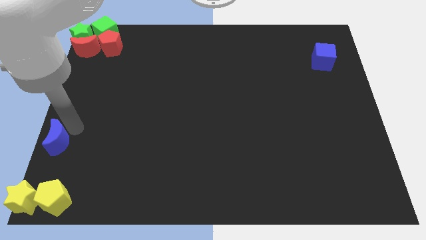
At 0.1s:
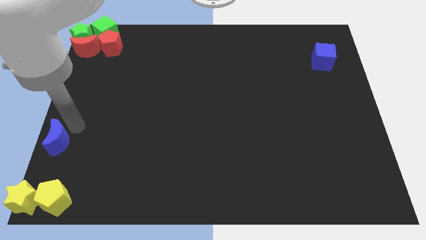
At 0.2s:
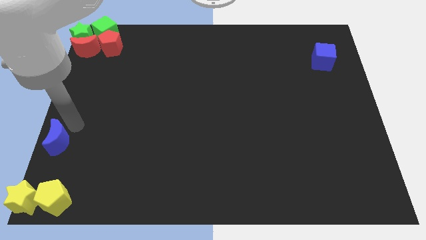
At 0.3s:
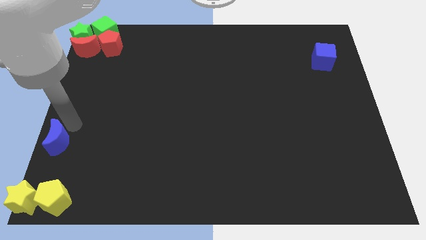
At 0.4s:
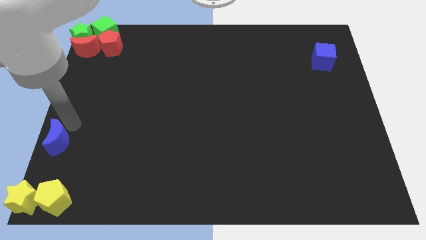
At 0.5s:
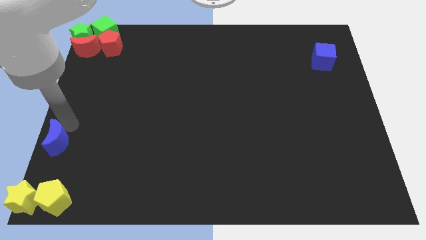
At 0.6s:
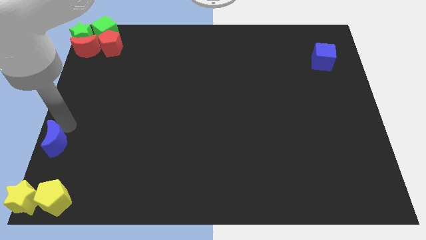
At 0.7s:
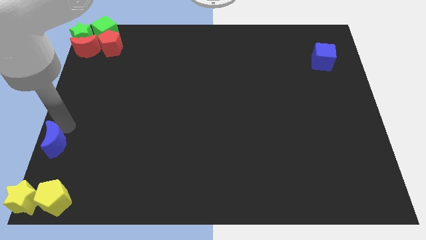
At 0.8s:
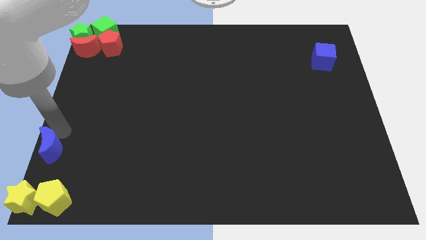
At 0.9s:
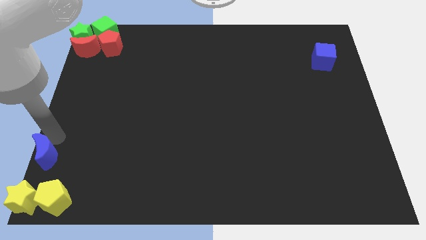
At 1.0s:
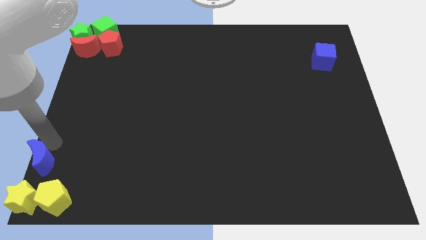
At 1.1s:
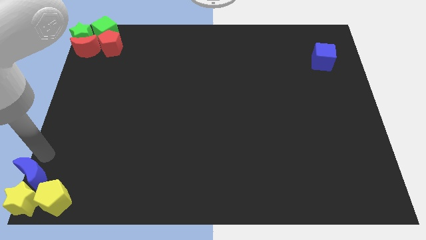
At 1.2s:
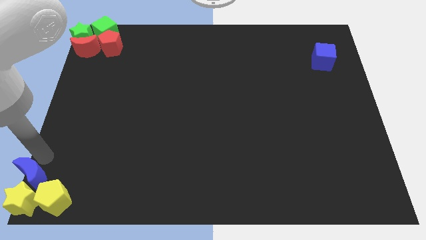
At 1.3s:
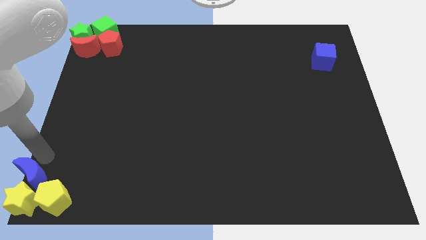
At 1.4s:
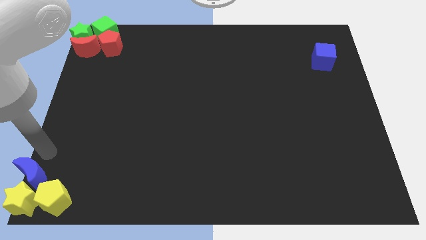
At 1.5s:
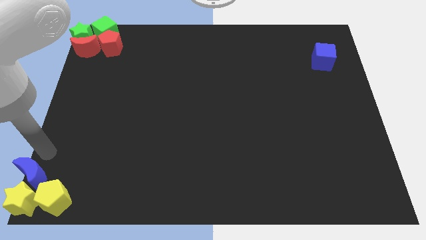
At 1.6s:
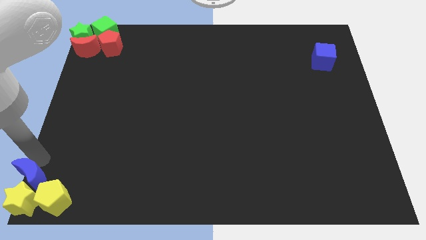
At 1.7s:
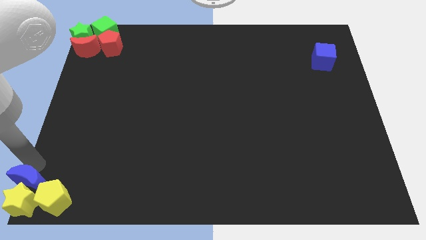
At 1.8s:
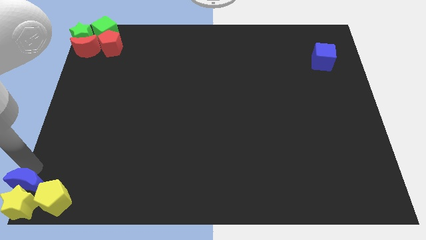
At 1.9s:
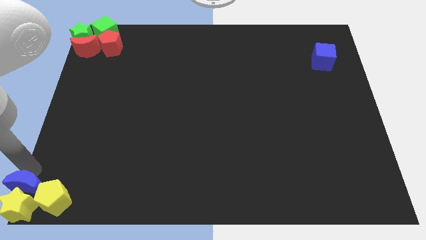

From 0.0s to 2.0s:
push the blue moon into the yellow star

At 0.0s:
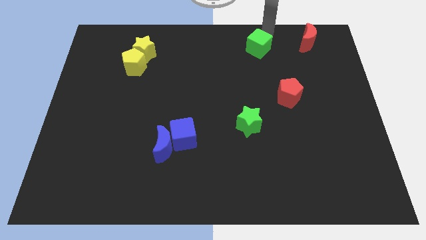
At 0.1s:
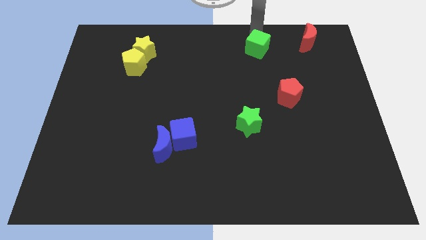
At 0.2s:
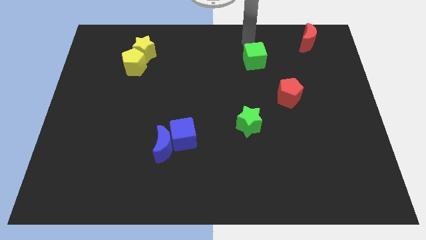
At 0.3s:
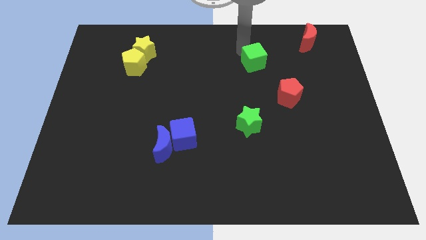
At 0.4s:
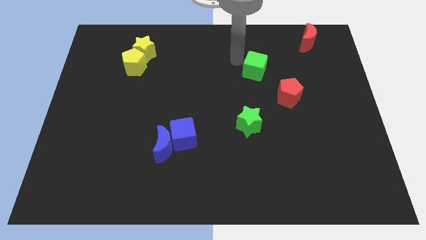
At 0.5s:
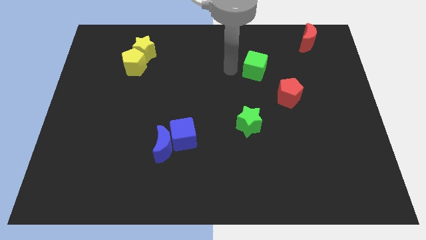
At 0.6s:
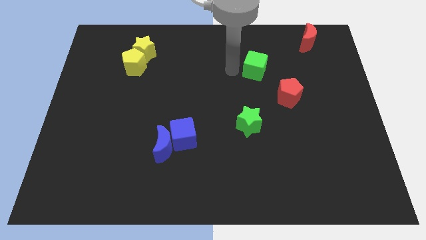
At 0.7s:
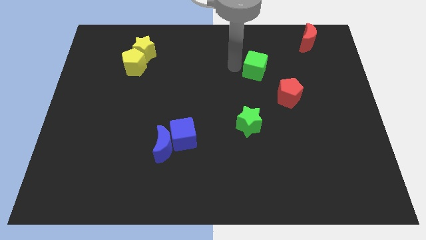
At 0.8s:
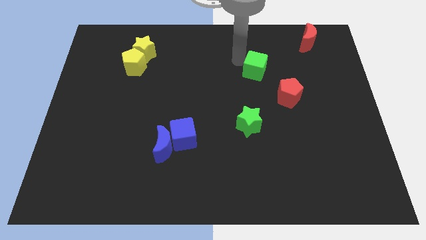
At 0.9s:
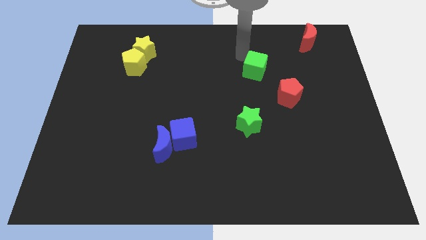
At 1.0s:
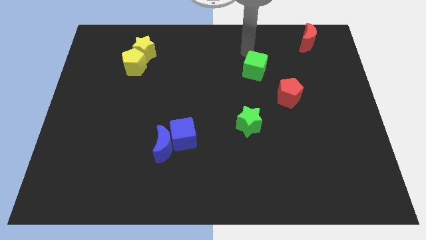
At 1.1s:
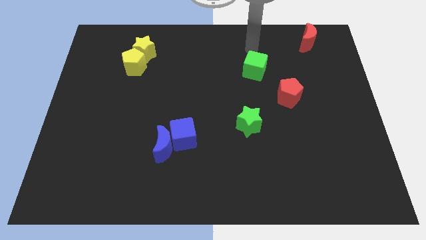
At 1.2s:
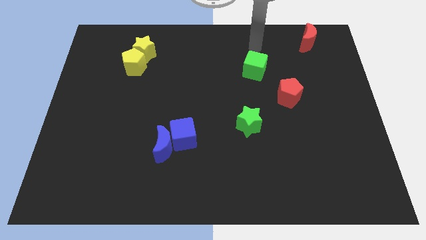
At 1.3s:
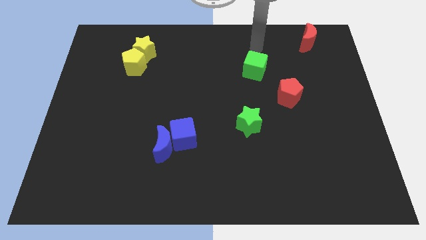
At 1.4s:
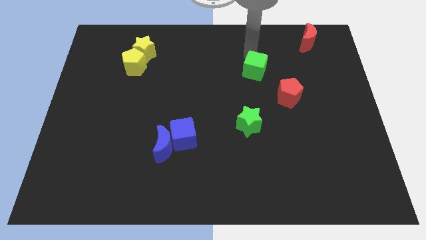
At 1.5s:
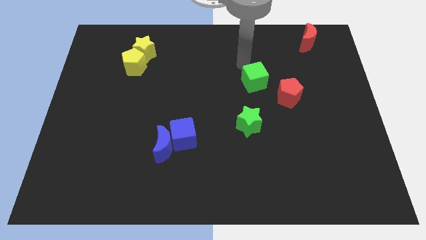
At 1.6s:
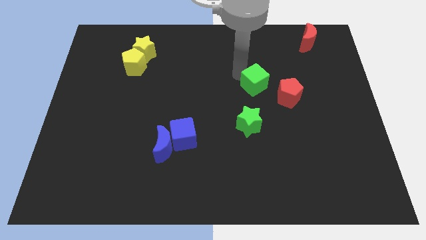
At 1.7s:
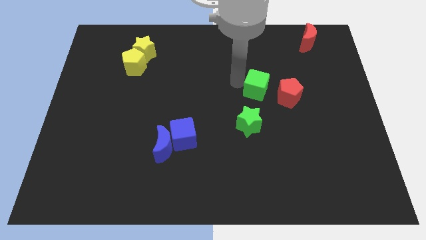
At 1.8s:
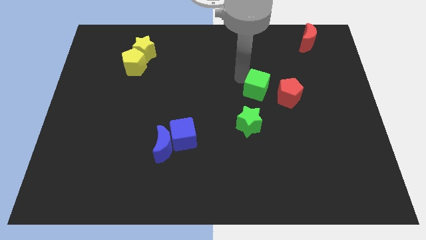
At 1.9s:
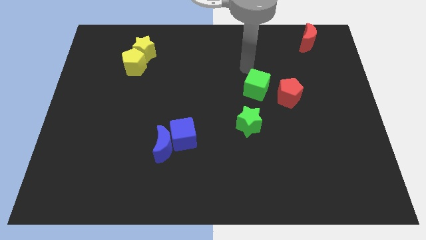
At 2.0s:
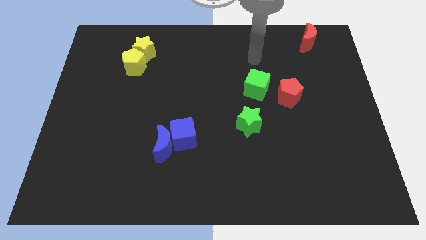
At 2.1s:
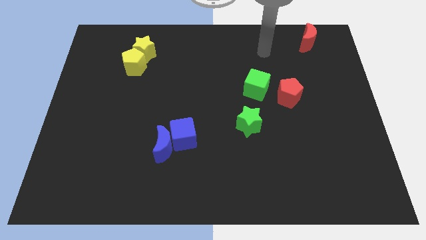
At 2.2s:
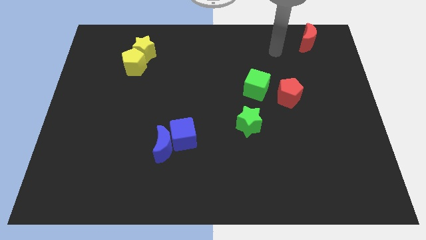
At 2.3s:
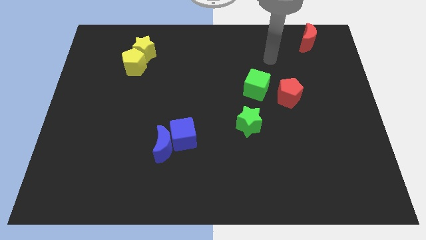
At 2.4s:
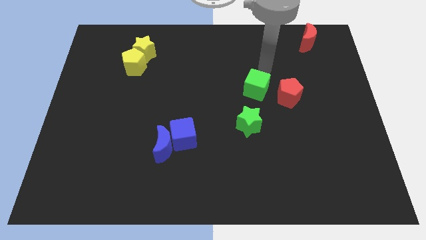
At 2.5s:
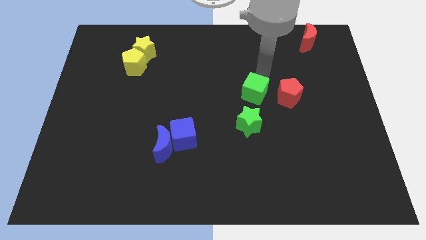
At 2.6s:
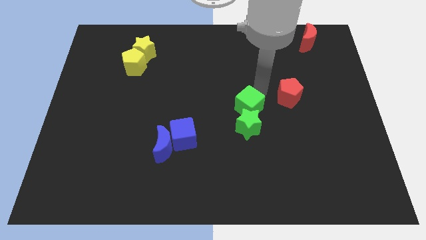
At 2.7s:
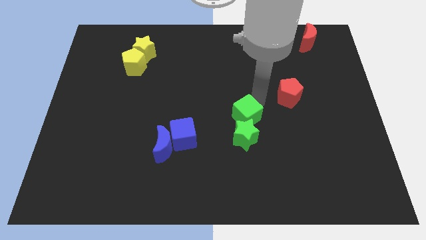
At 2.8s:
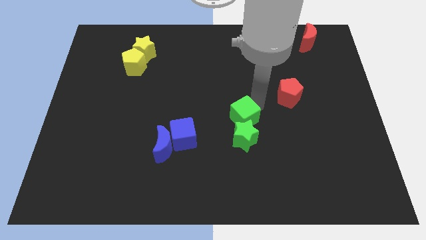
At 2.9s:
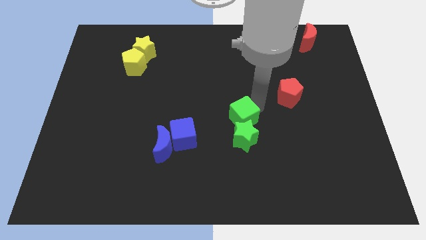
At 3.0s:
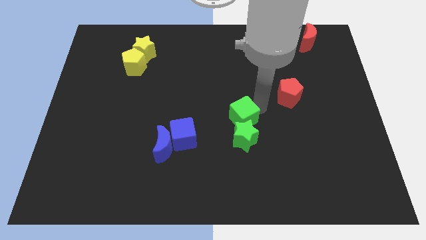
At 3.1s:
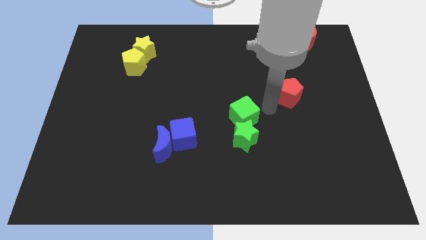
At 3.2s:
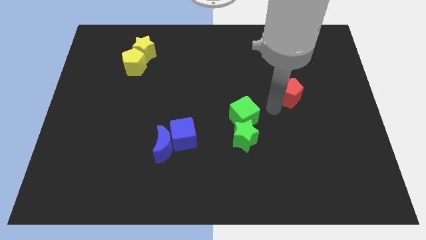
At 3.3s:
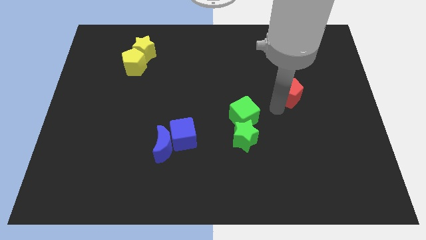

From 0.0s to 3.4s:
put the green cube into green star

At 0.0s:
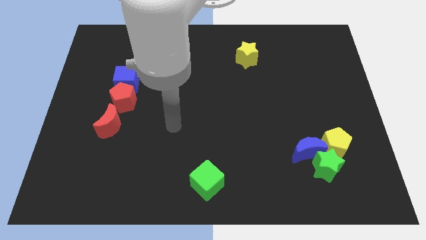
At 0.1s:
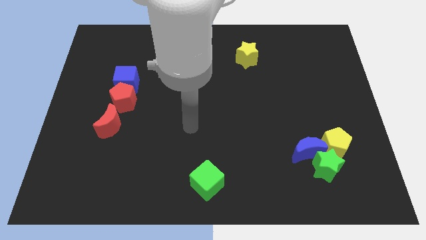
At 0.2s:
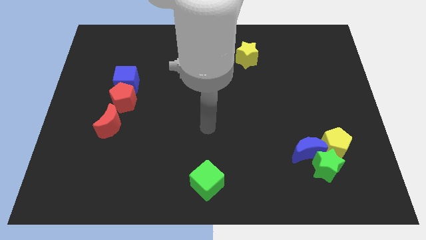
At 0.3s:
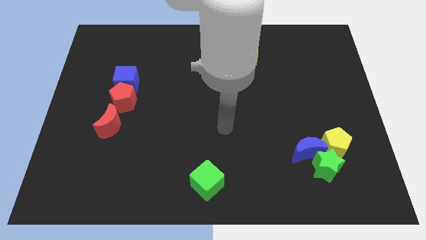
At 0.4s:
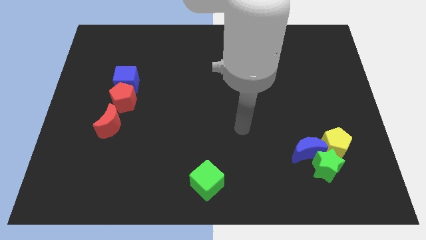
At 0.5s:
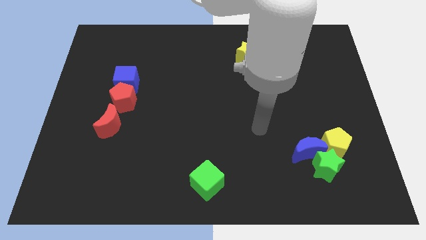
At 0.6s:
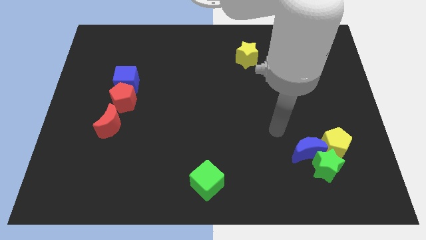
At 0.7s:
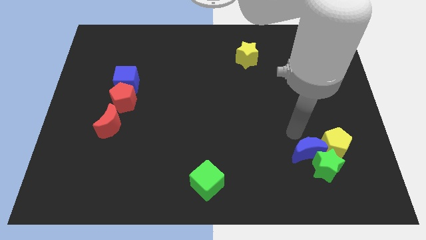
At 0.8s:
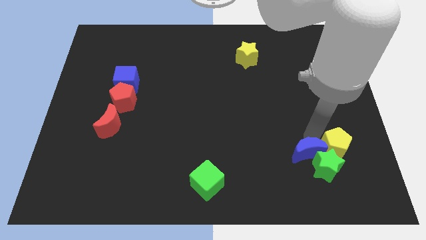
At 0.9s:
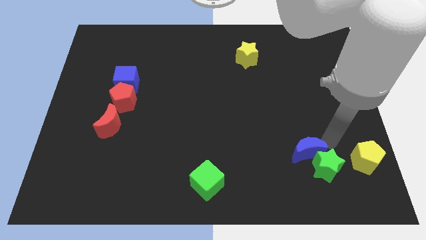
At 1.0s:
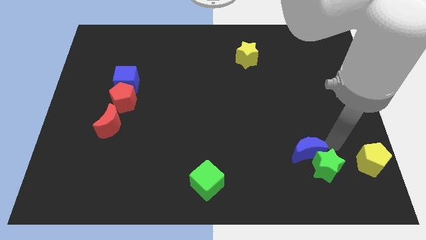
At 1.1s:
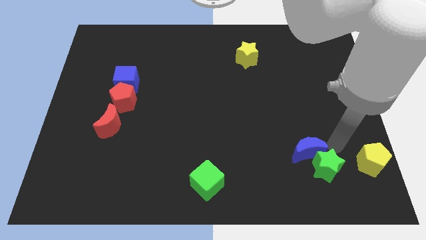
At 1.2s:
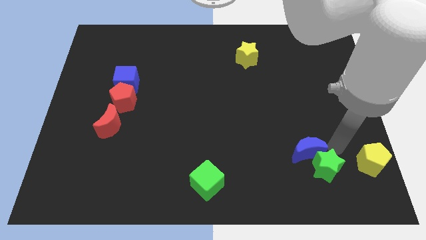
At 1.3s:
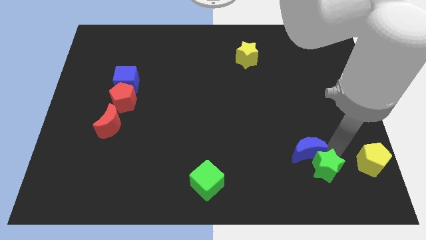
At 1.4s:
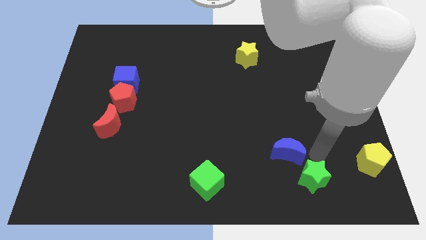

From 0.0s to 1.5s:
move the yellow pentagon to the right side of the board

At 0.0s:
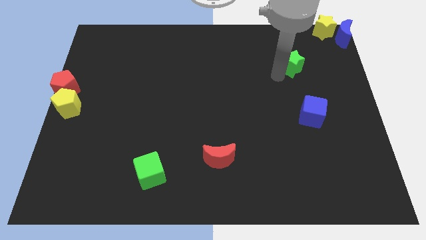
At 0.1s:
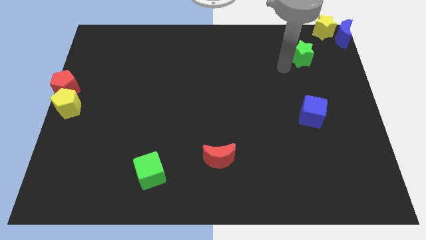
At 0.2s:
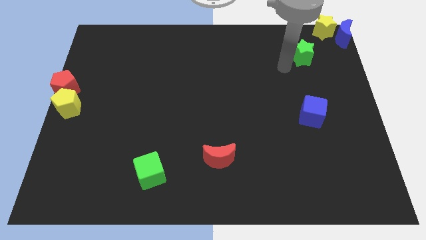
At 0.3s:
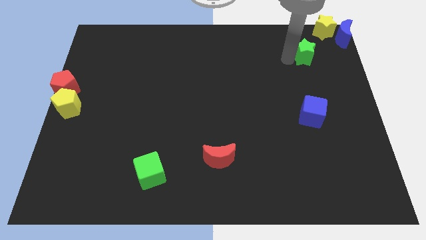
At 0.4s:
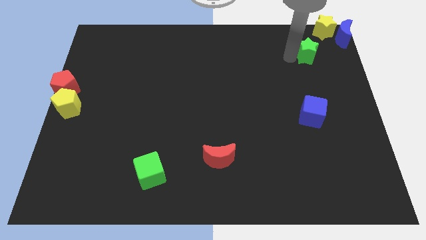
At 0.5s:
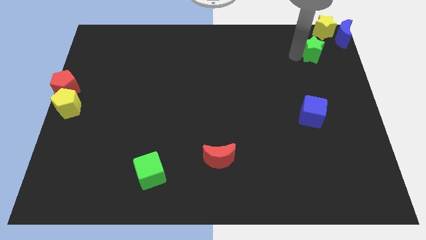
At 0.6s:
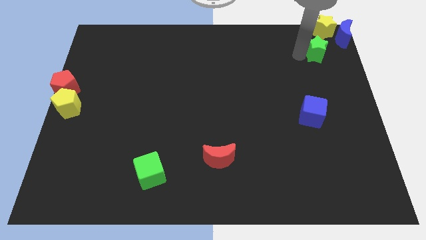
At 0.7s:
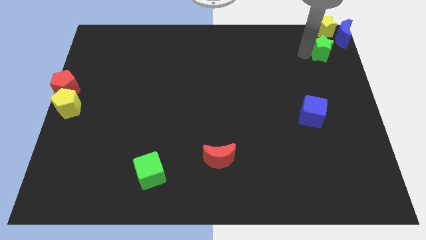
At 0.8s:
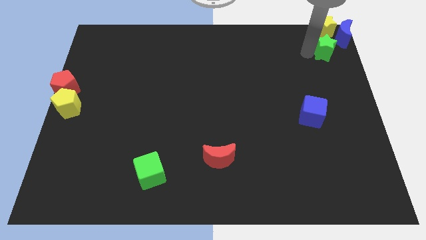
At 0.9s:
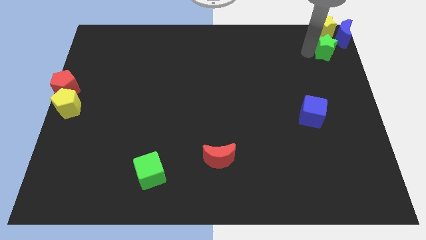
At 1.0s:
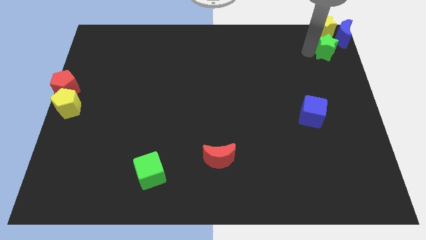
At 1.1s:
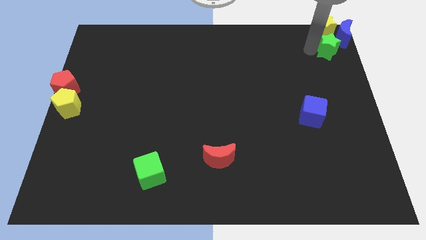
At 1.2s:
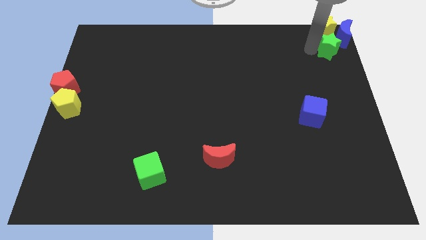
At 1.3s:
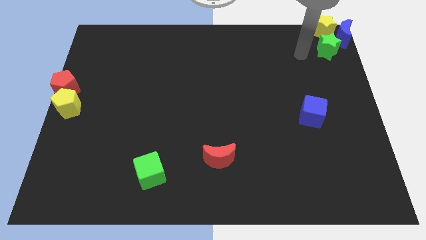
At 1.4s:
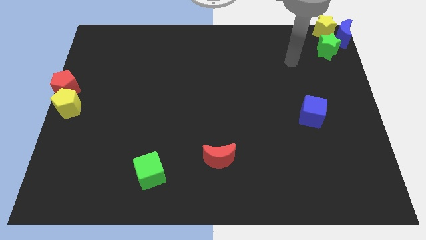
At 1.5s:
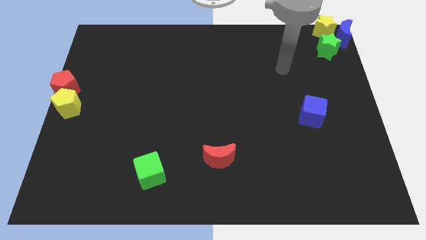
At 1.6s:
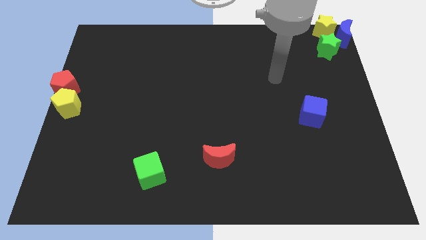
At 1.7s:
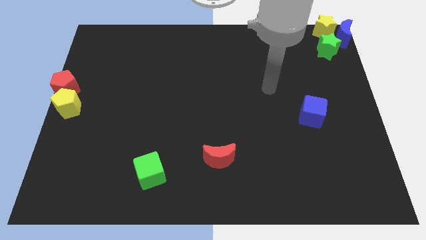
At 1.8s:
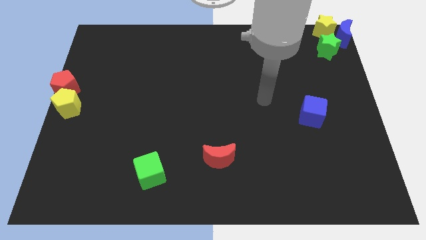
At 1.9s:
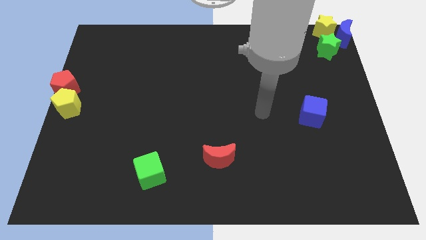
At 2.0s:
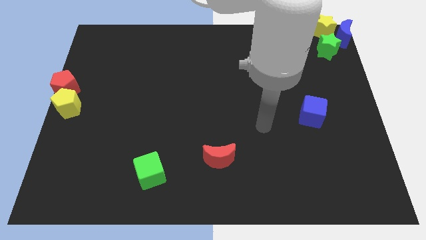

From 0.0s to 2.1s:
place green star below yellow star
